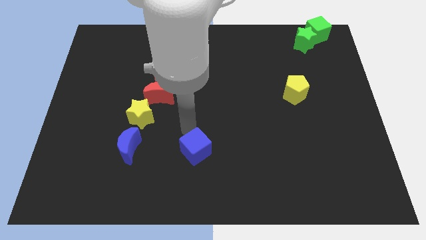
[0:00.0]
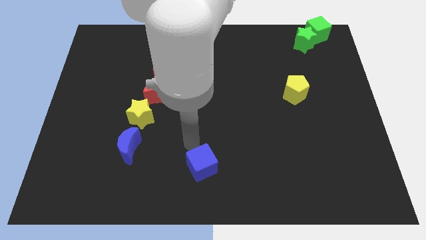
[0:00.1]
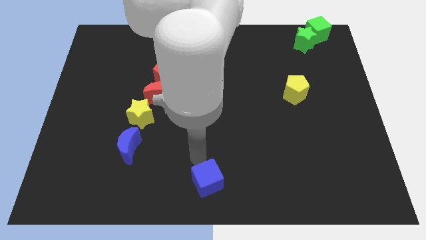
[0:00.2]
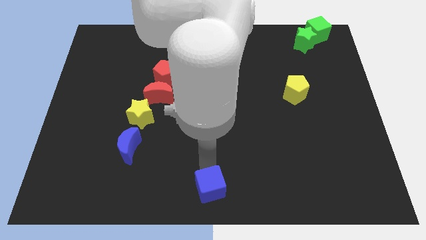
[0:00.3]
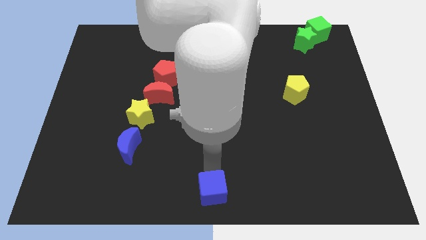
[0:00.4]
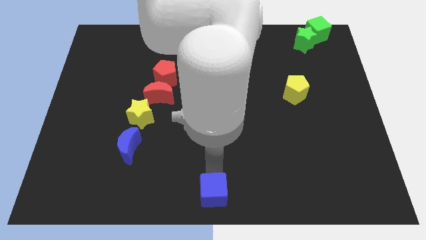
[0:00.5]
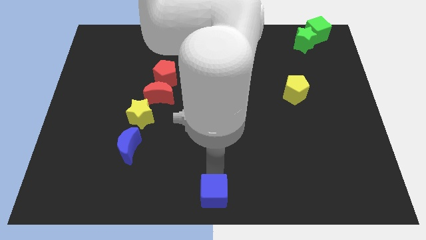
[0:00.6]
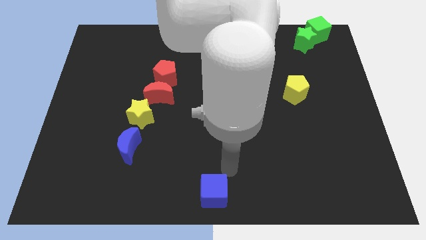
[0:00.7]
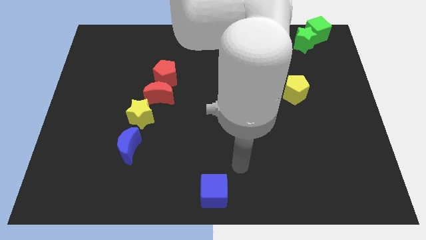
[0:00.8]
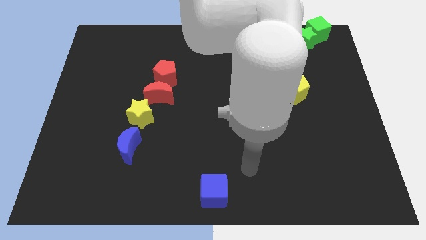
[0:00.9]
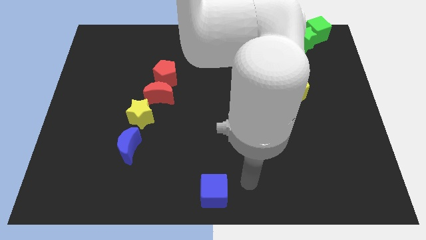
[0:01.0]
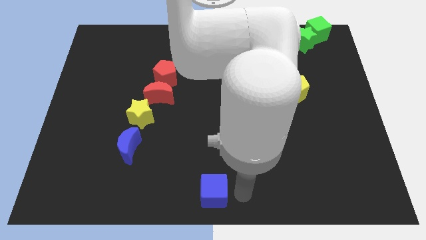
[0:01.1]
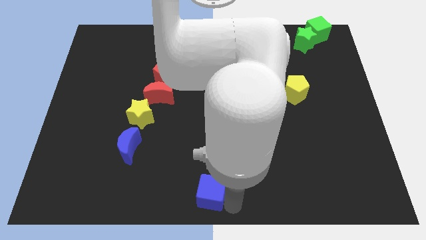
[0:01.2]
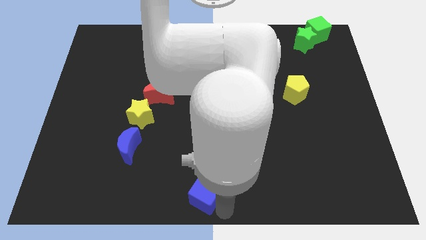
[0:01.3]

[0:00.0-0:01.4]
put the blue cube at the bottom center

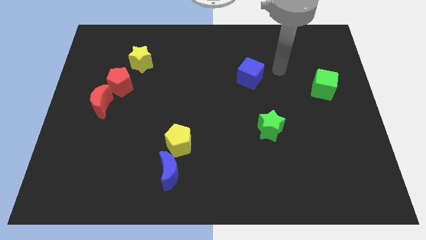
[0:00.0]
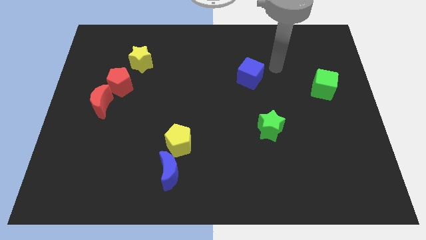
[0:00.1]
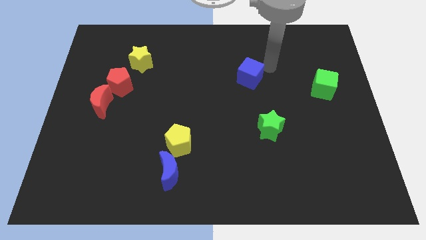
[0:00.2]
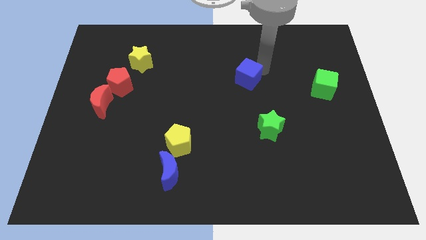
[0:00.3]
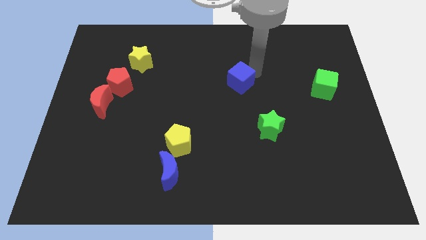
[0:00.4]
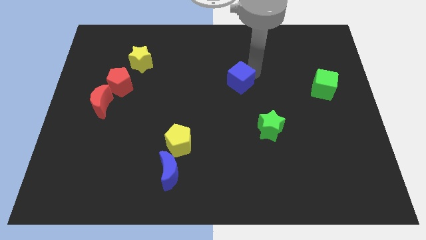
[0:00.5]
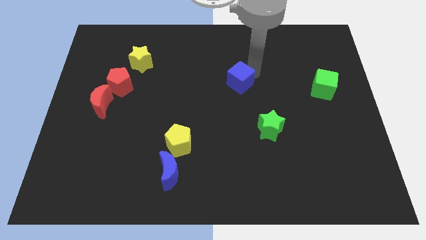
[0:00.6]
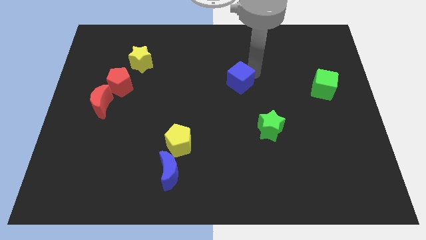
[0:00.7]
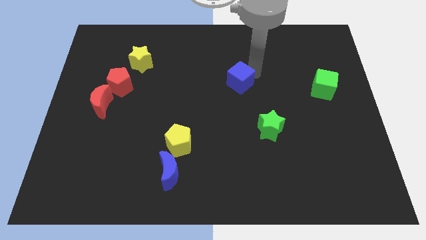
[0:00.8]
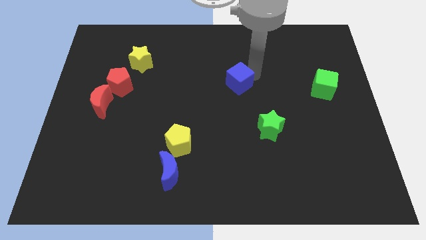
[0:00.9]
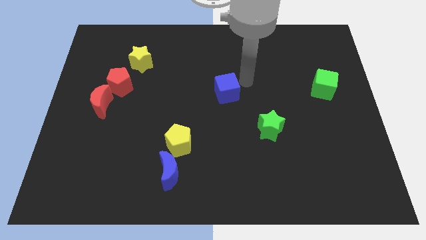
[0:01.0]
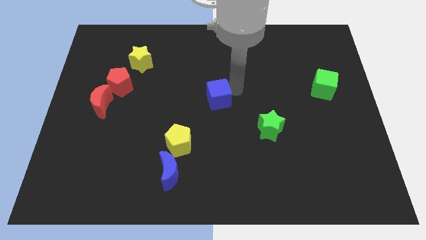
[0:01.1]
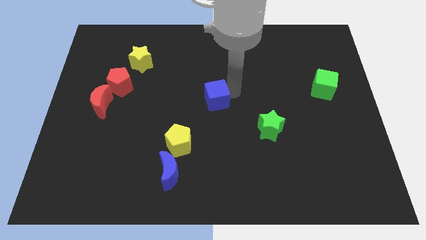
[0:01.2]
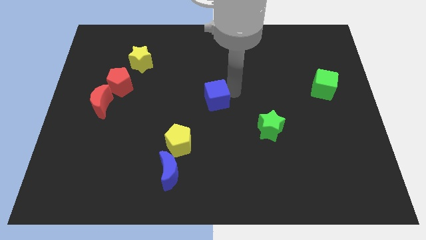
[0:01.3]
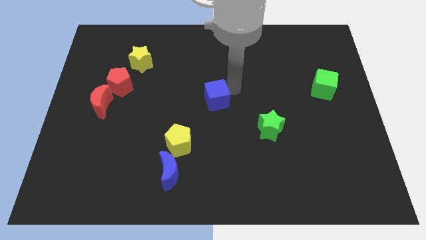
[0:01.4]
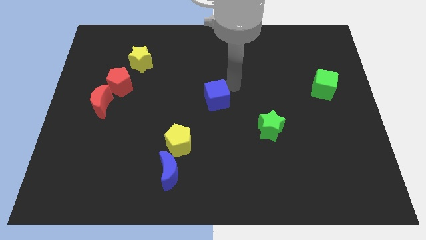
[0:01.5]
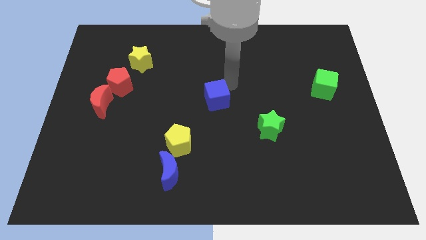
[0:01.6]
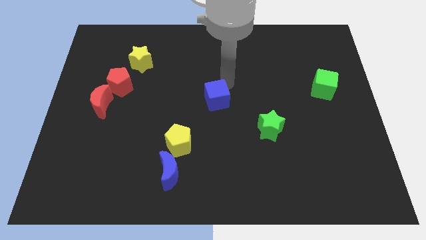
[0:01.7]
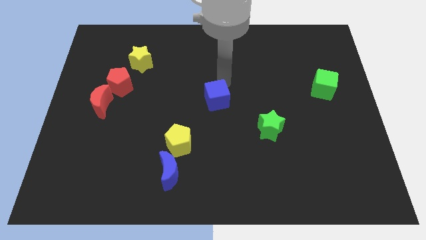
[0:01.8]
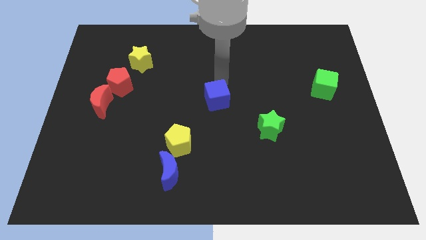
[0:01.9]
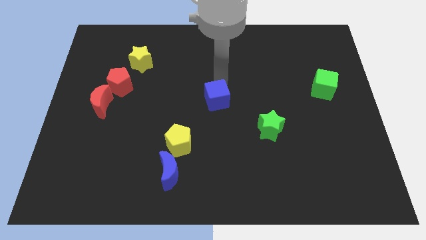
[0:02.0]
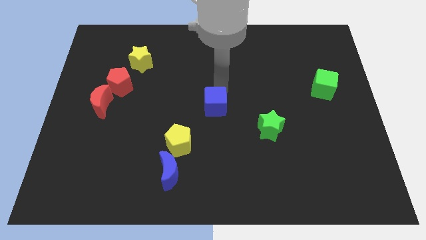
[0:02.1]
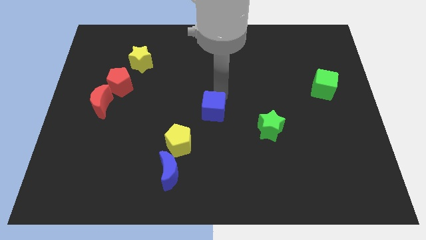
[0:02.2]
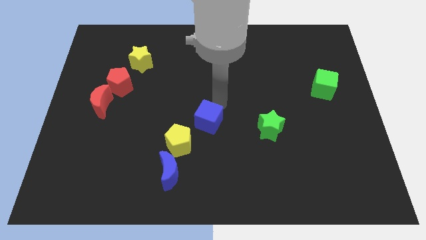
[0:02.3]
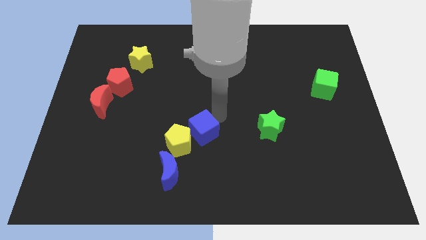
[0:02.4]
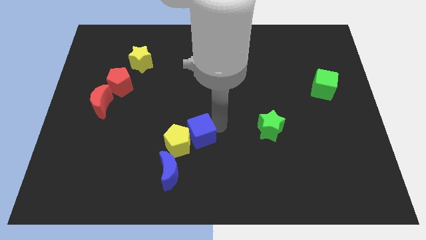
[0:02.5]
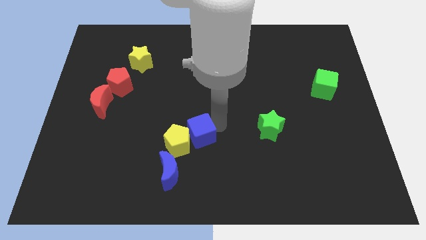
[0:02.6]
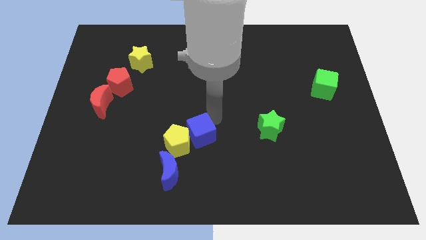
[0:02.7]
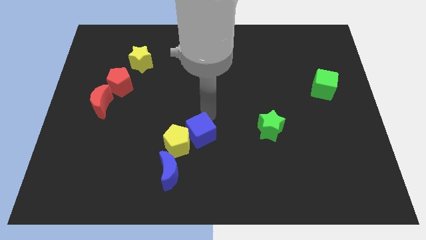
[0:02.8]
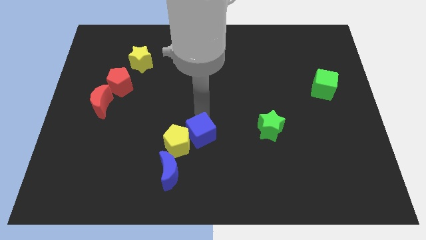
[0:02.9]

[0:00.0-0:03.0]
place blue cube on the right of yellow pentagon

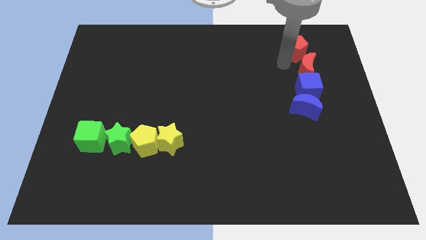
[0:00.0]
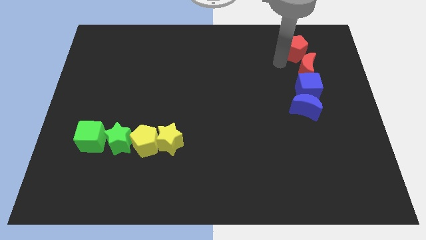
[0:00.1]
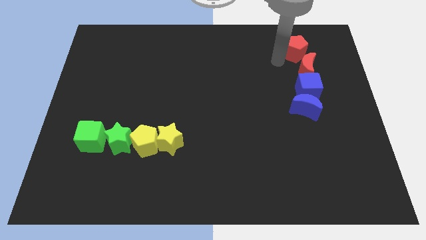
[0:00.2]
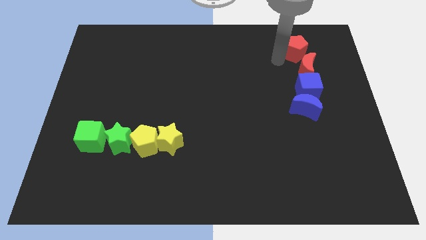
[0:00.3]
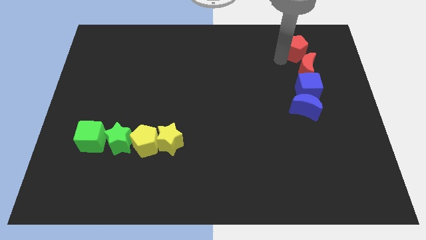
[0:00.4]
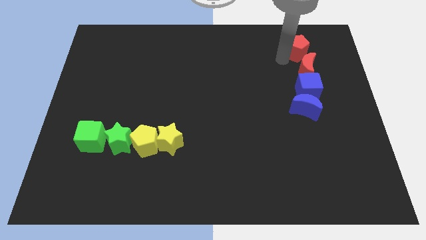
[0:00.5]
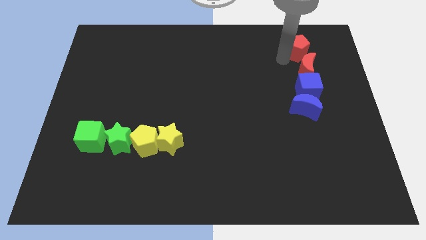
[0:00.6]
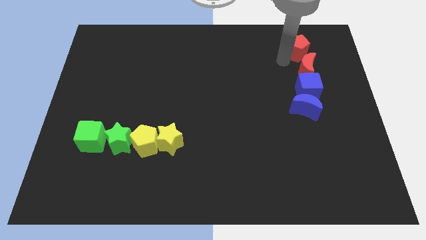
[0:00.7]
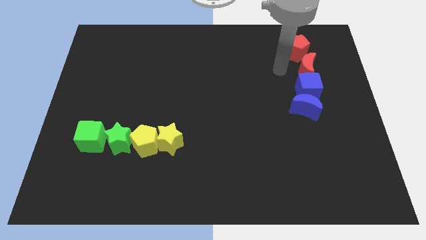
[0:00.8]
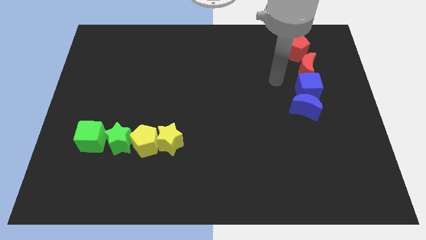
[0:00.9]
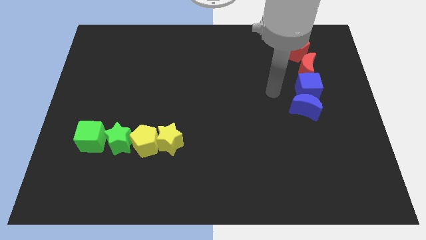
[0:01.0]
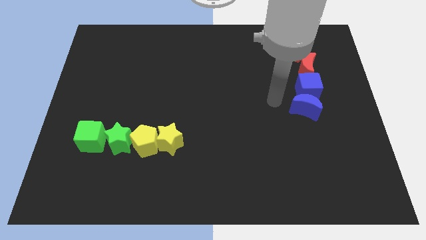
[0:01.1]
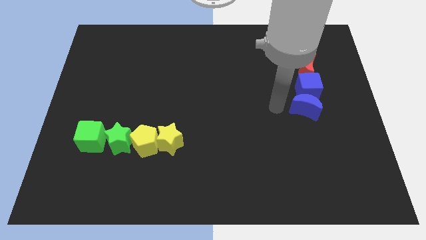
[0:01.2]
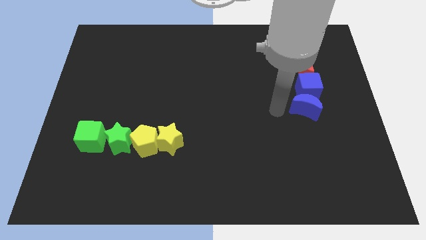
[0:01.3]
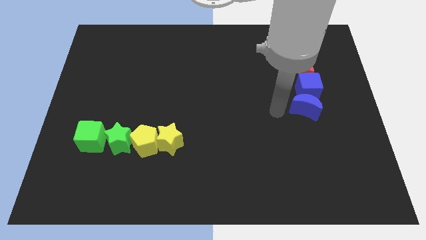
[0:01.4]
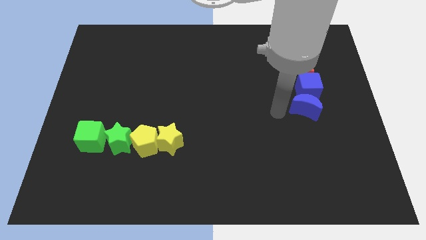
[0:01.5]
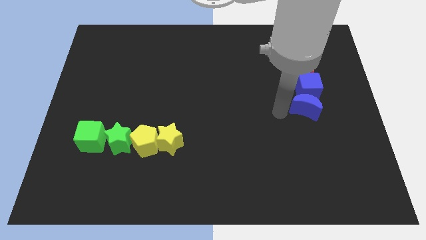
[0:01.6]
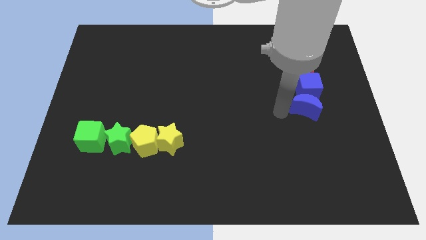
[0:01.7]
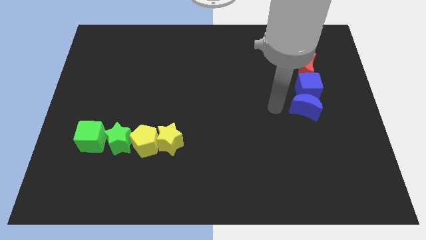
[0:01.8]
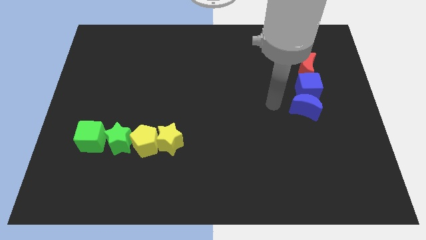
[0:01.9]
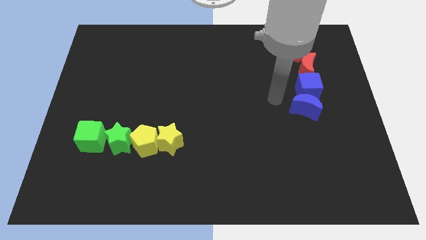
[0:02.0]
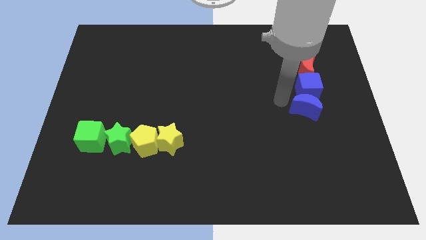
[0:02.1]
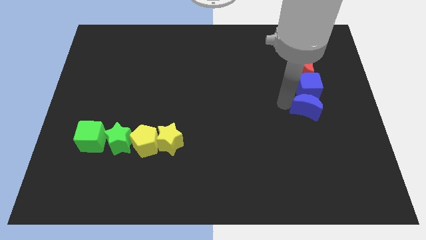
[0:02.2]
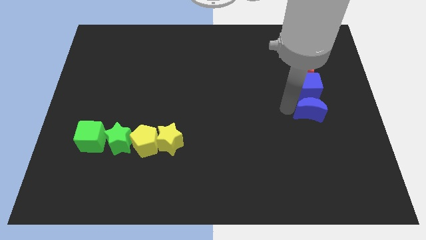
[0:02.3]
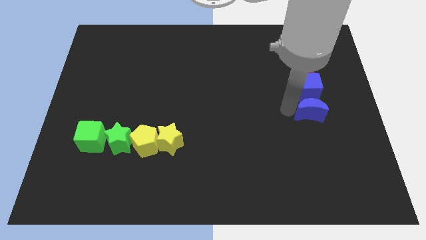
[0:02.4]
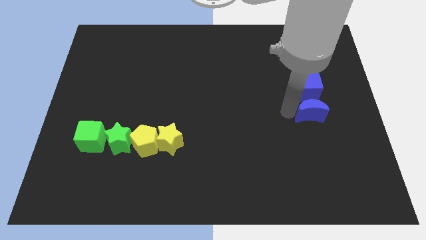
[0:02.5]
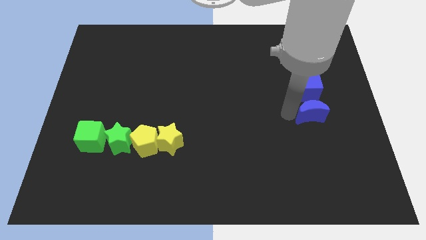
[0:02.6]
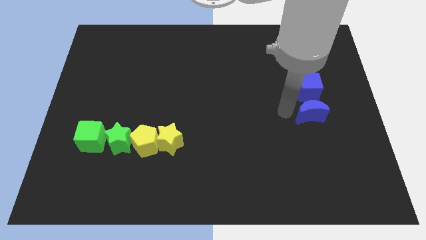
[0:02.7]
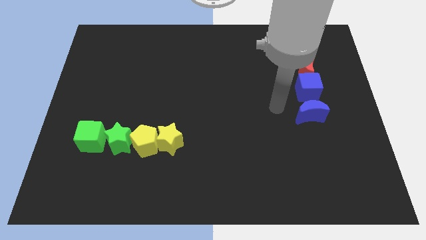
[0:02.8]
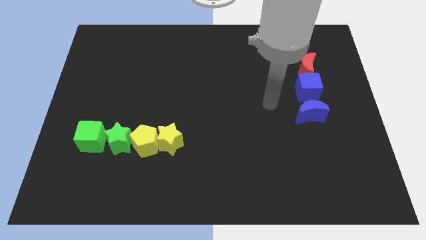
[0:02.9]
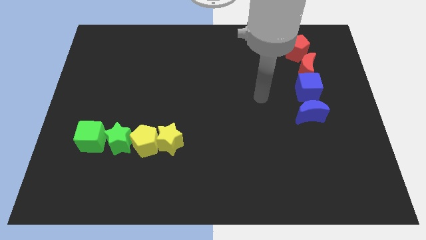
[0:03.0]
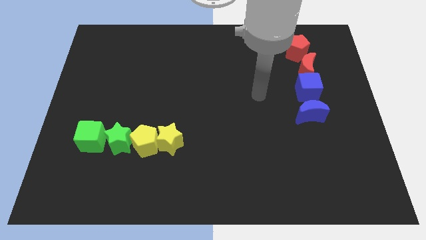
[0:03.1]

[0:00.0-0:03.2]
move the red pentagon and blue moon slightly to form a vertical line of blocks

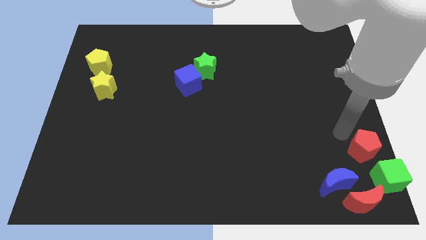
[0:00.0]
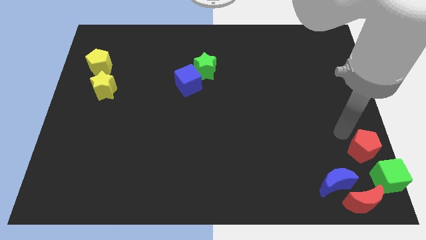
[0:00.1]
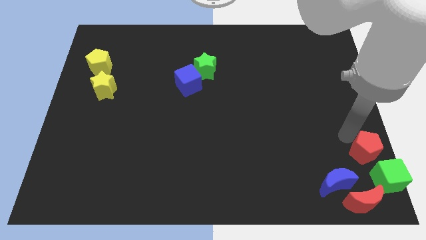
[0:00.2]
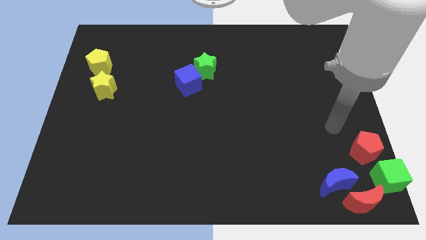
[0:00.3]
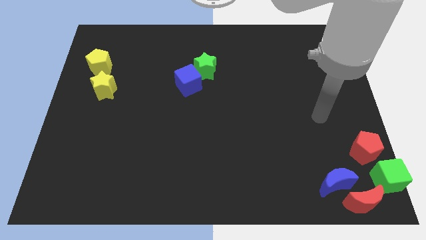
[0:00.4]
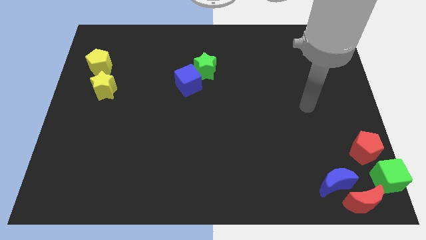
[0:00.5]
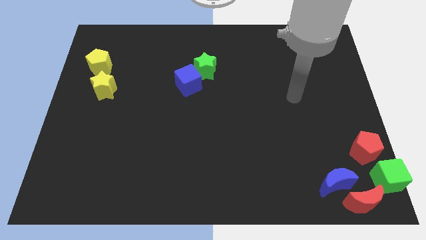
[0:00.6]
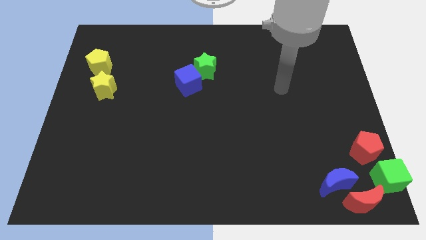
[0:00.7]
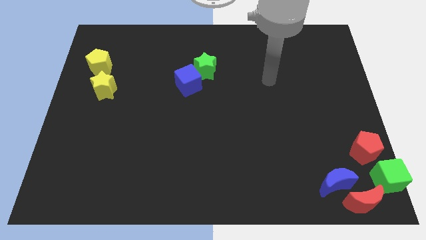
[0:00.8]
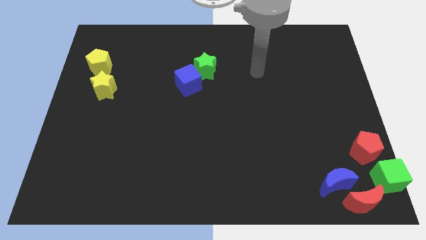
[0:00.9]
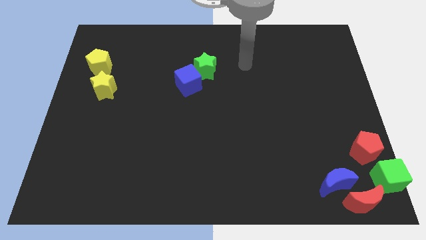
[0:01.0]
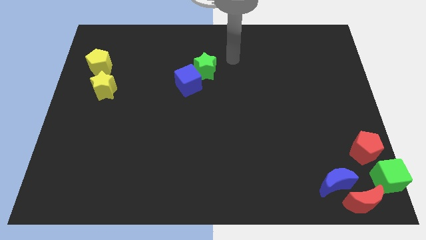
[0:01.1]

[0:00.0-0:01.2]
move the arm away from the red pentagon

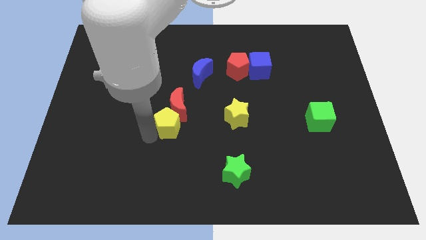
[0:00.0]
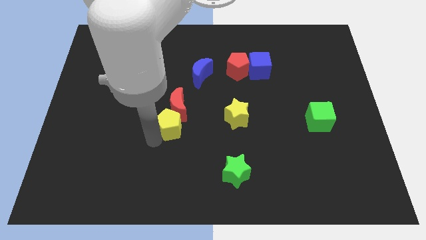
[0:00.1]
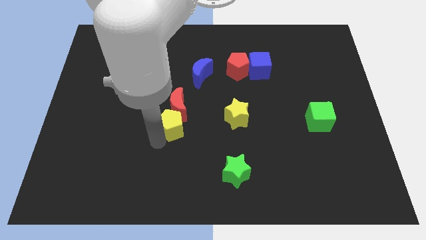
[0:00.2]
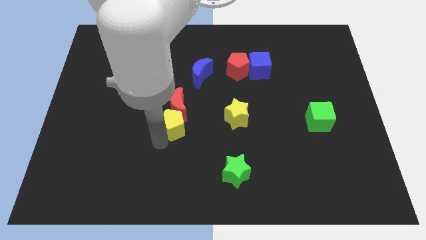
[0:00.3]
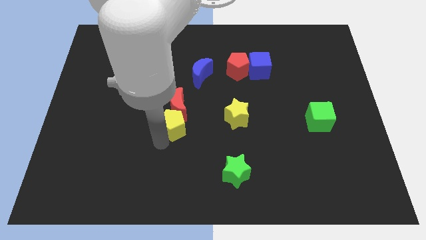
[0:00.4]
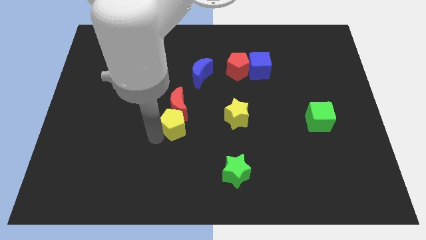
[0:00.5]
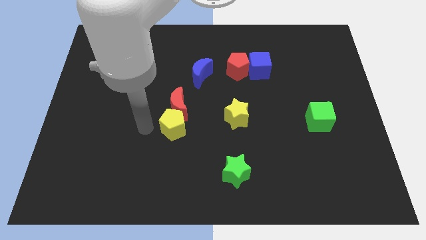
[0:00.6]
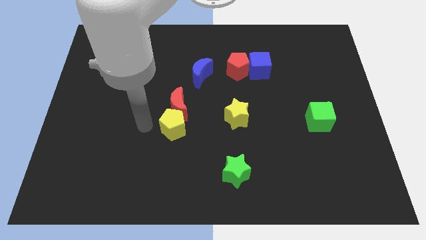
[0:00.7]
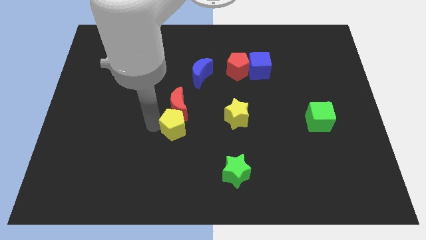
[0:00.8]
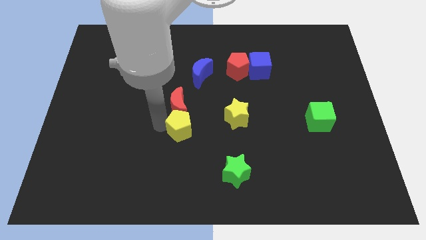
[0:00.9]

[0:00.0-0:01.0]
place yellow pentagon at the bottom of red moon
